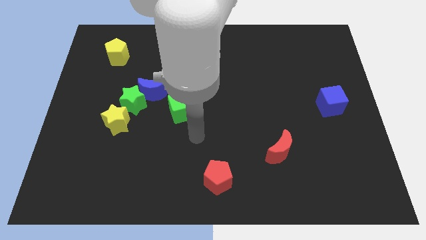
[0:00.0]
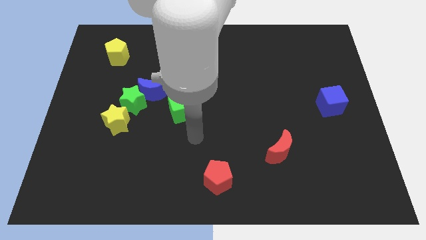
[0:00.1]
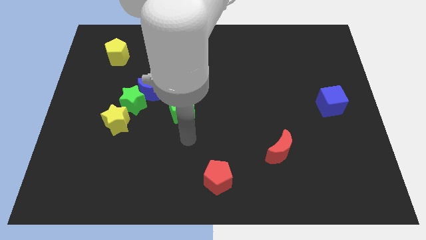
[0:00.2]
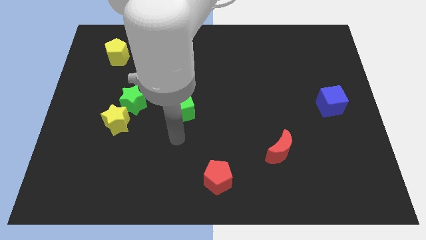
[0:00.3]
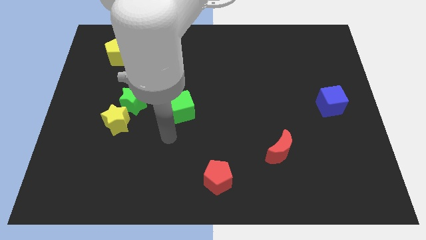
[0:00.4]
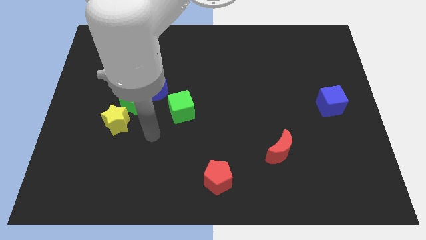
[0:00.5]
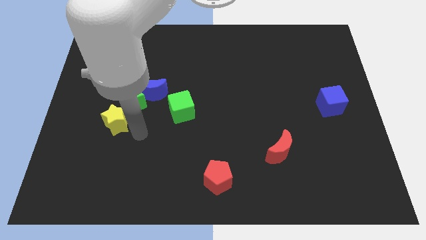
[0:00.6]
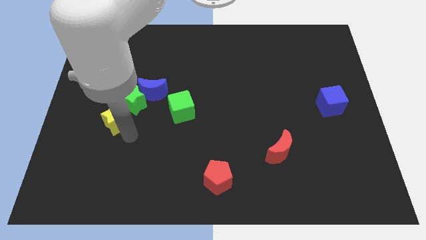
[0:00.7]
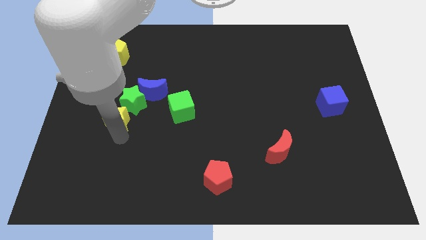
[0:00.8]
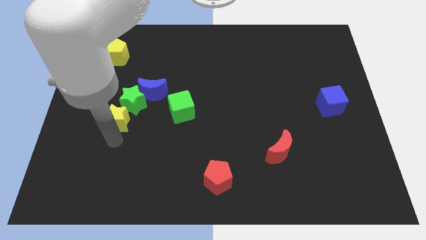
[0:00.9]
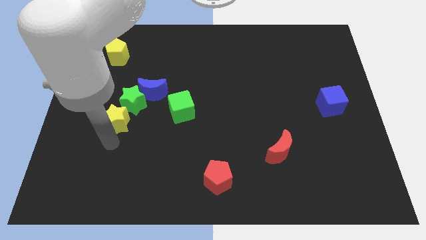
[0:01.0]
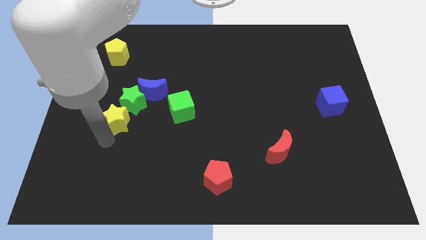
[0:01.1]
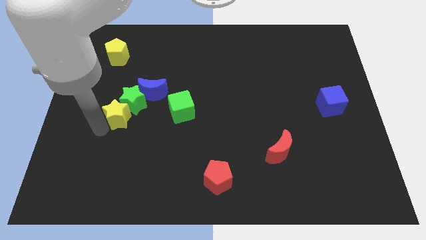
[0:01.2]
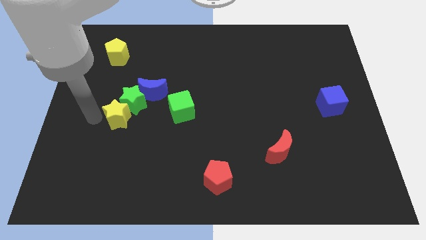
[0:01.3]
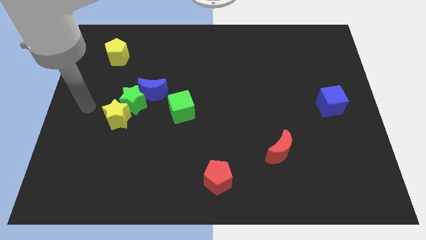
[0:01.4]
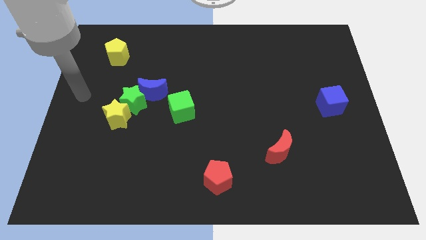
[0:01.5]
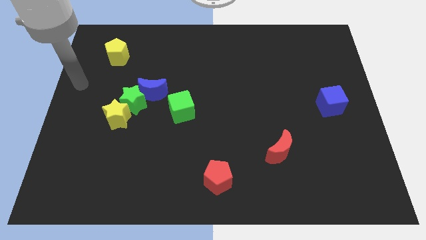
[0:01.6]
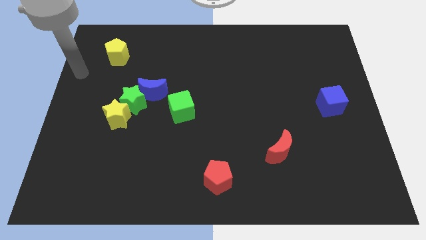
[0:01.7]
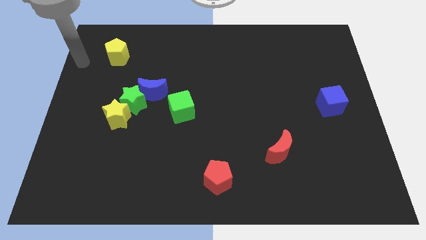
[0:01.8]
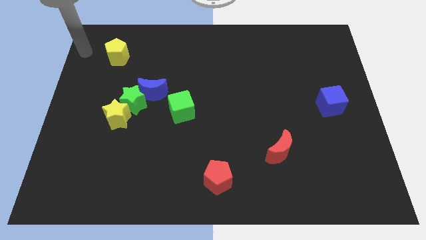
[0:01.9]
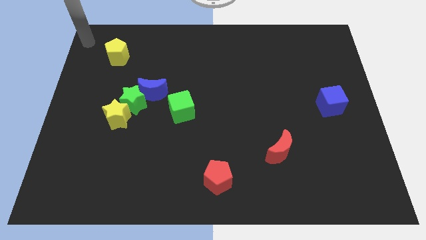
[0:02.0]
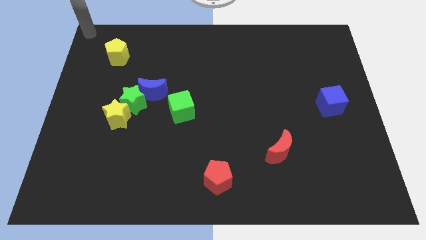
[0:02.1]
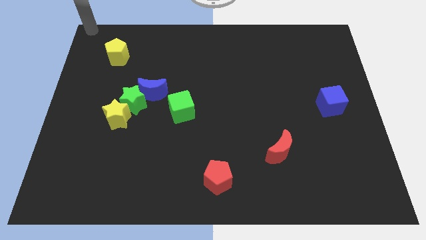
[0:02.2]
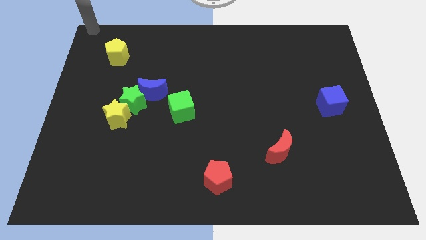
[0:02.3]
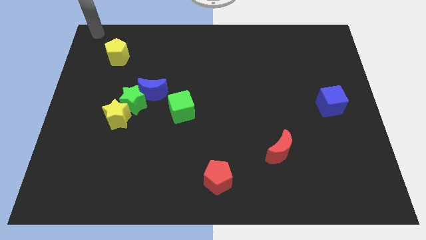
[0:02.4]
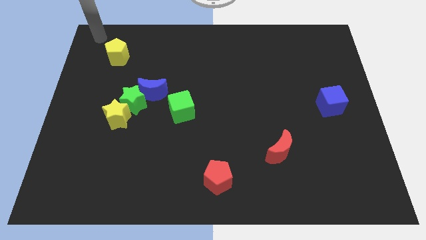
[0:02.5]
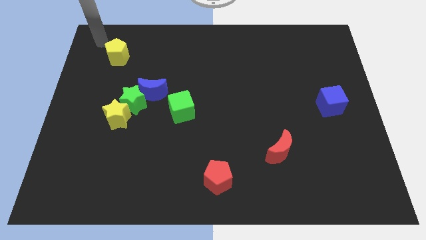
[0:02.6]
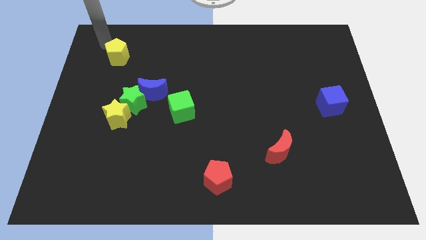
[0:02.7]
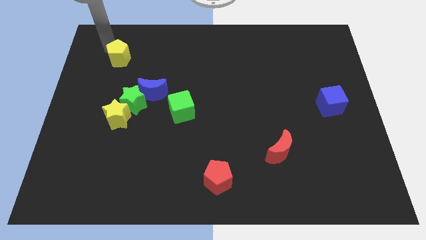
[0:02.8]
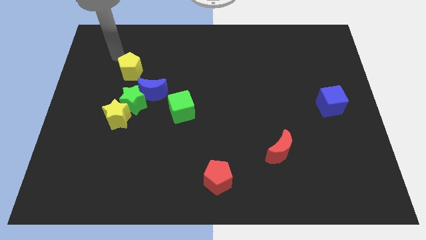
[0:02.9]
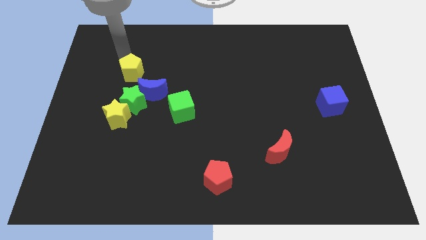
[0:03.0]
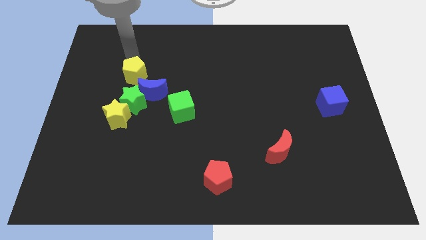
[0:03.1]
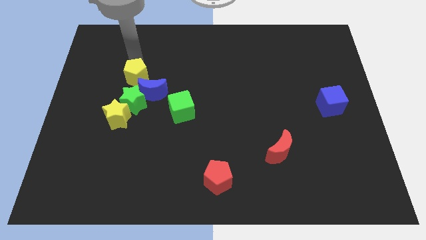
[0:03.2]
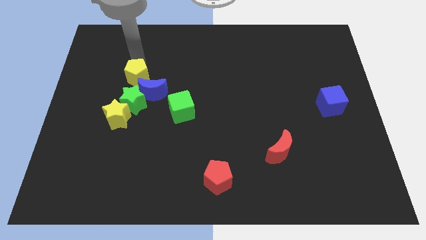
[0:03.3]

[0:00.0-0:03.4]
place the yellow pentagon at the top left of the blue moon

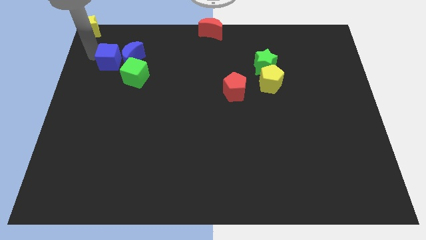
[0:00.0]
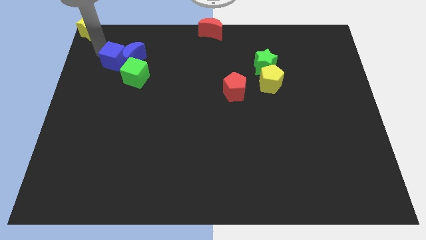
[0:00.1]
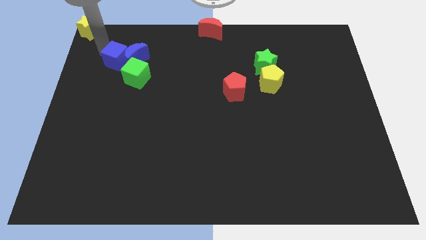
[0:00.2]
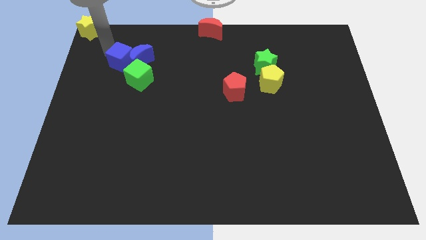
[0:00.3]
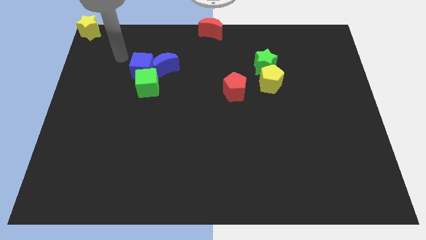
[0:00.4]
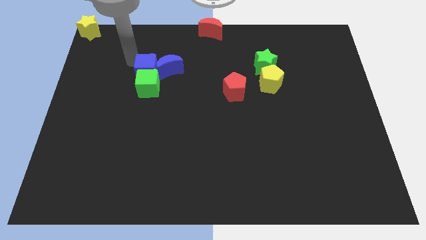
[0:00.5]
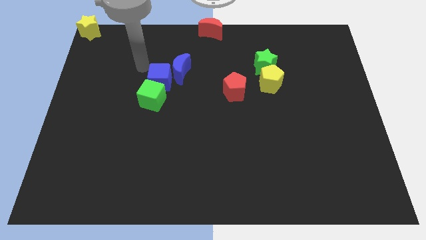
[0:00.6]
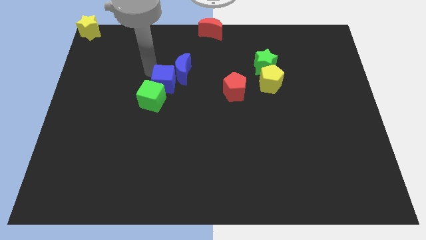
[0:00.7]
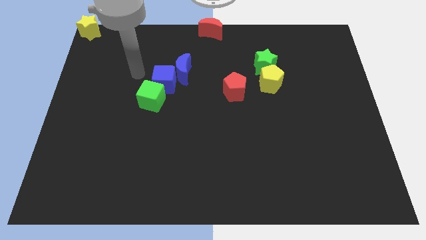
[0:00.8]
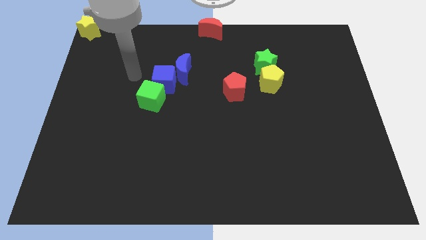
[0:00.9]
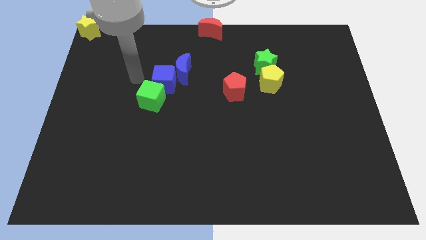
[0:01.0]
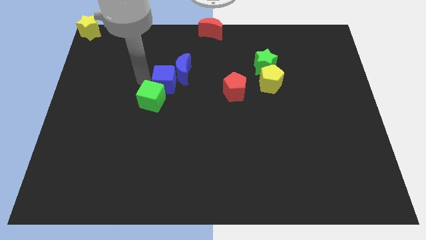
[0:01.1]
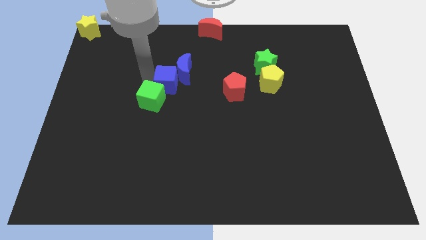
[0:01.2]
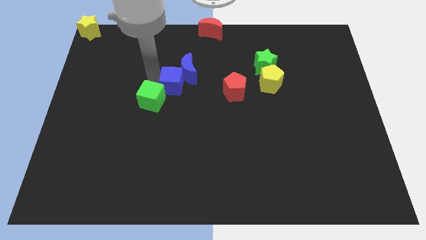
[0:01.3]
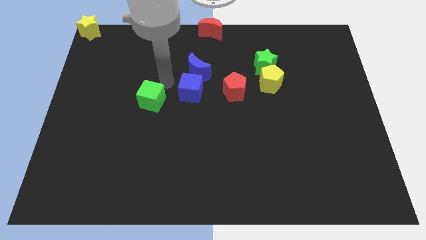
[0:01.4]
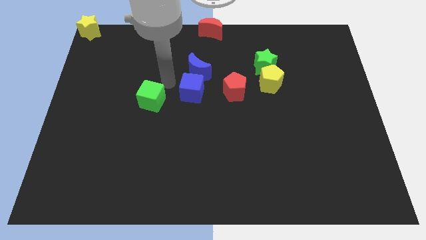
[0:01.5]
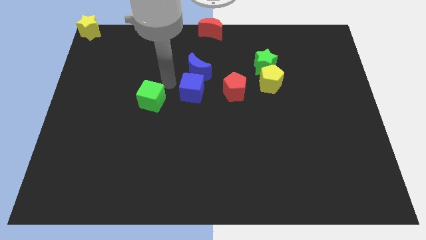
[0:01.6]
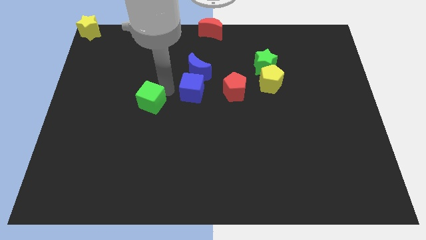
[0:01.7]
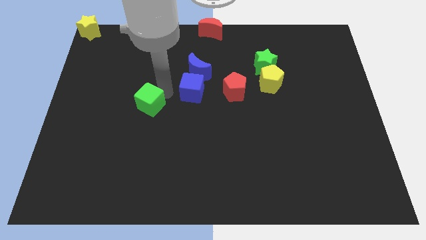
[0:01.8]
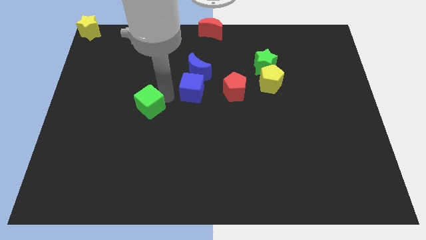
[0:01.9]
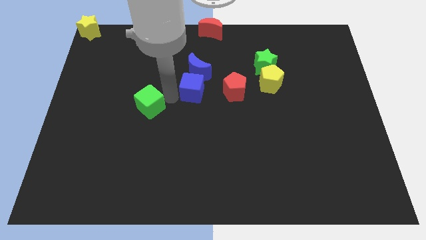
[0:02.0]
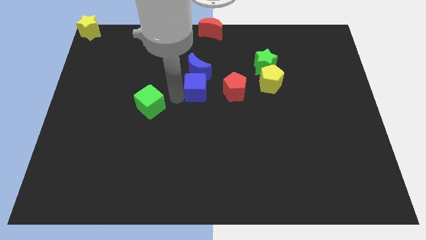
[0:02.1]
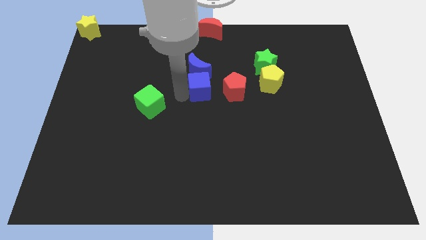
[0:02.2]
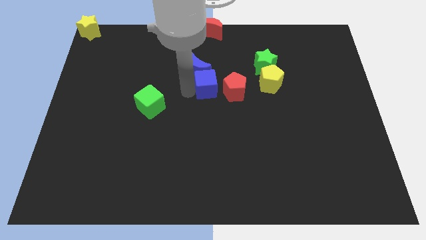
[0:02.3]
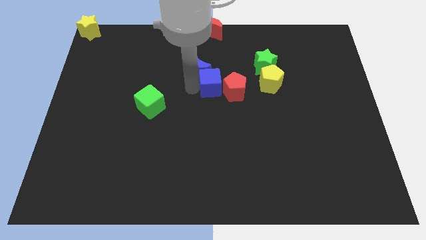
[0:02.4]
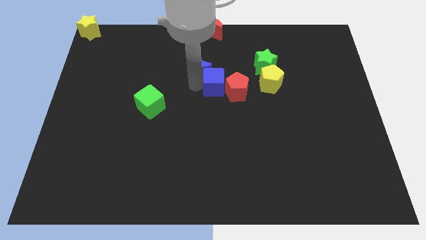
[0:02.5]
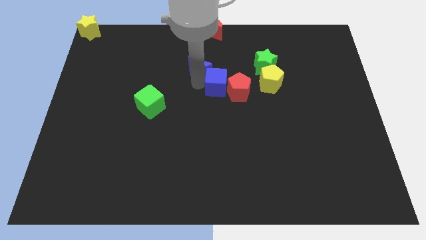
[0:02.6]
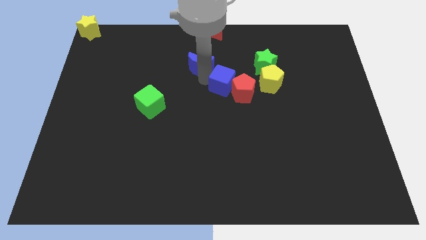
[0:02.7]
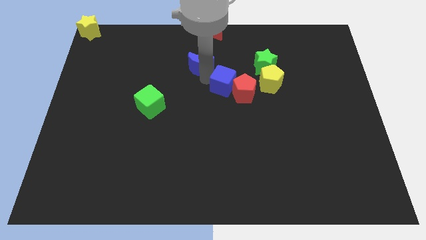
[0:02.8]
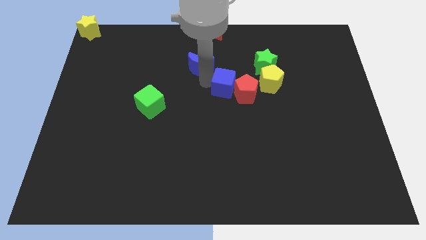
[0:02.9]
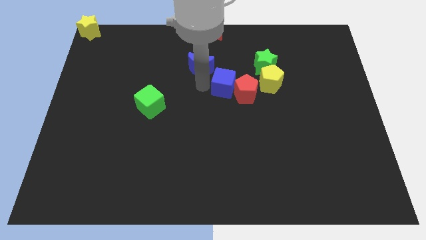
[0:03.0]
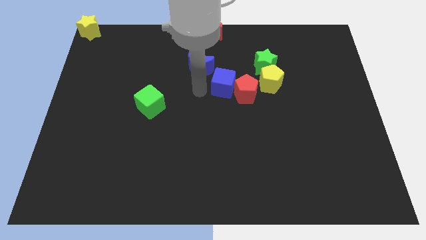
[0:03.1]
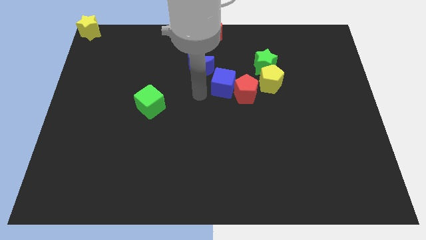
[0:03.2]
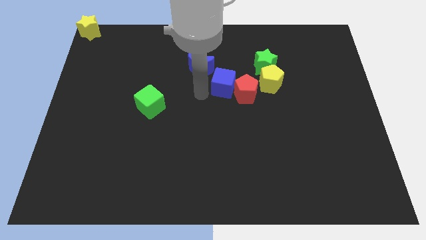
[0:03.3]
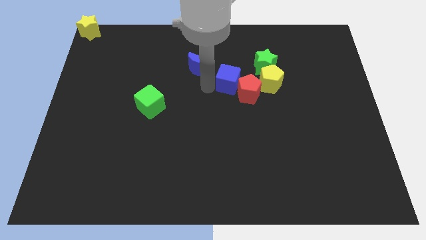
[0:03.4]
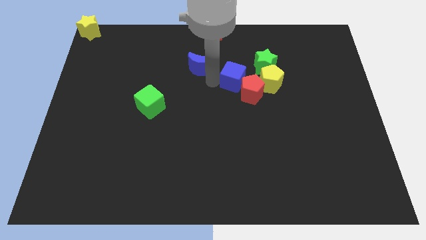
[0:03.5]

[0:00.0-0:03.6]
push the blue cube into the red pentagon

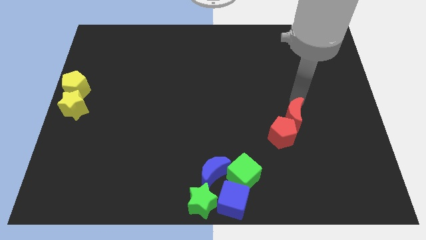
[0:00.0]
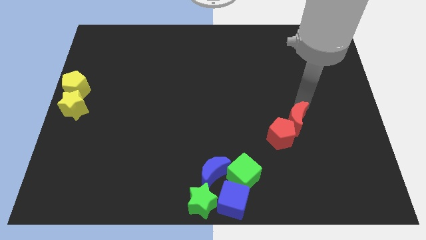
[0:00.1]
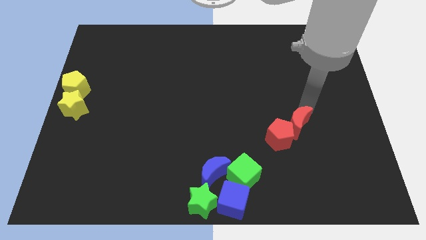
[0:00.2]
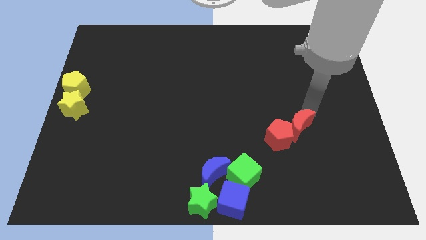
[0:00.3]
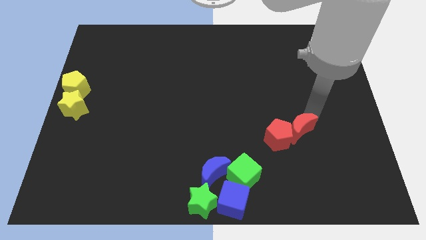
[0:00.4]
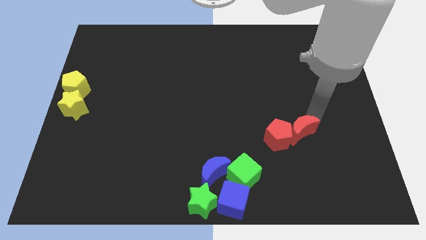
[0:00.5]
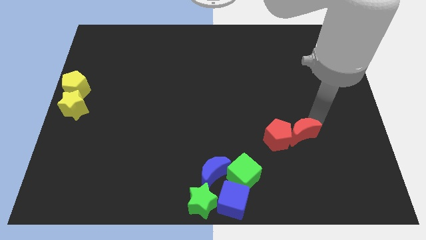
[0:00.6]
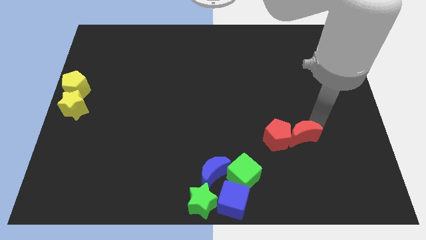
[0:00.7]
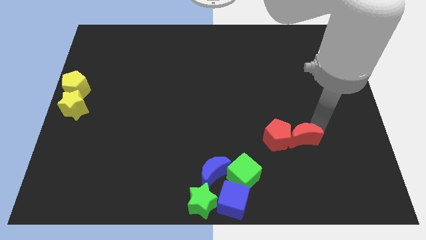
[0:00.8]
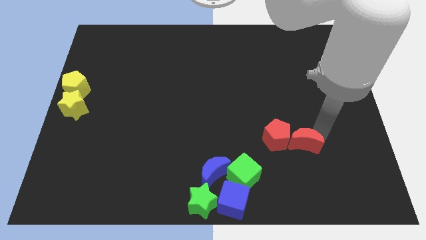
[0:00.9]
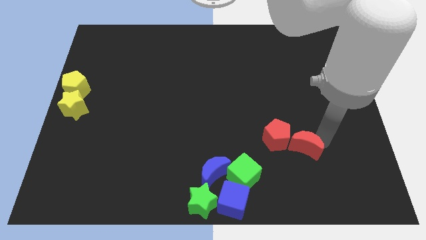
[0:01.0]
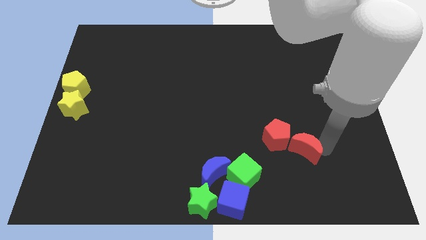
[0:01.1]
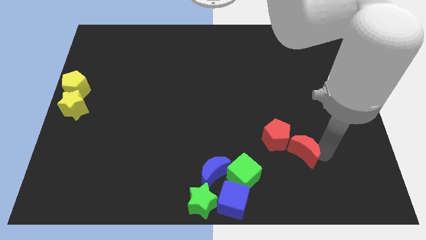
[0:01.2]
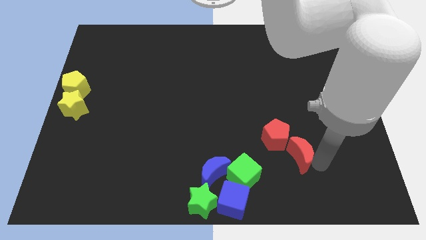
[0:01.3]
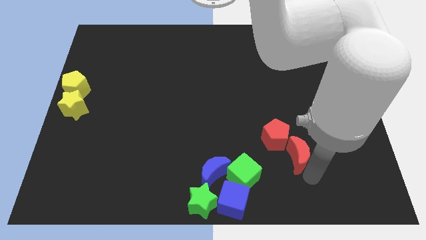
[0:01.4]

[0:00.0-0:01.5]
slide the red moon to the bottom right side of the red pentagon

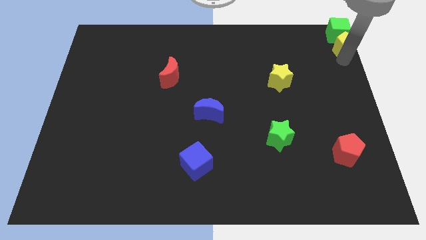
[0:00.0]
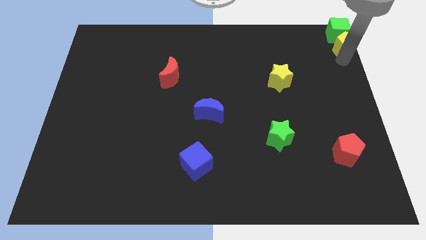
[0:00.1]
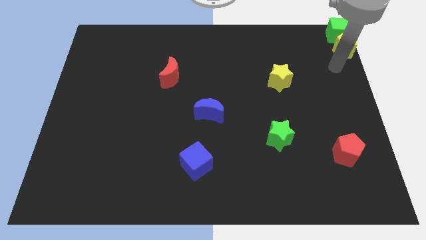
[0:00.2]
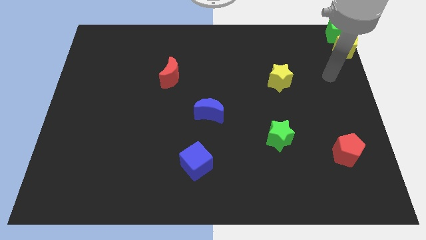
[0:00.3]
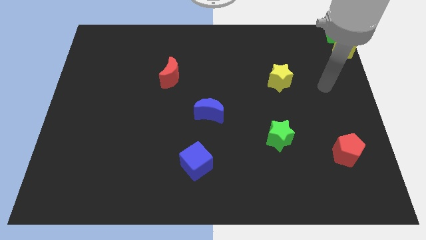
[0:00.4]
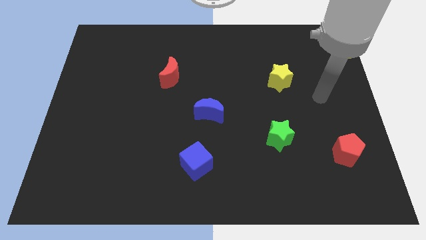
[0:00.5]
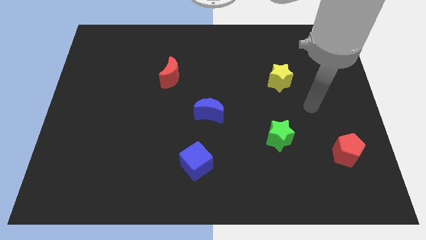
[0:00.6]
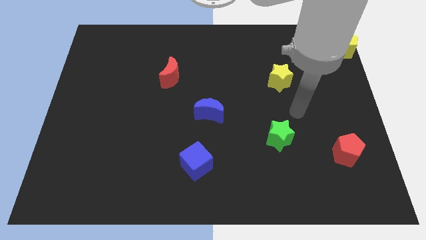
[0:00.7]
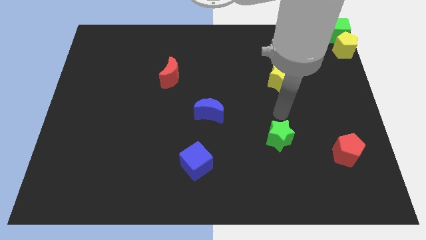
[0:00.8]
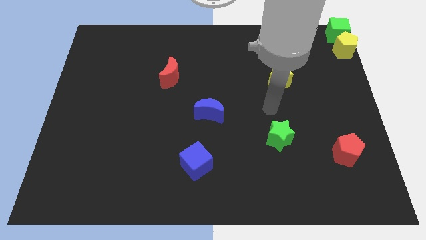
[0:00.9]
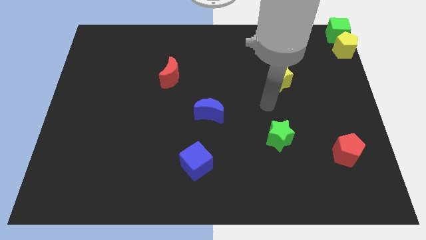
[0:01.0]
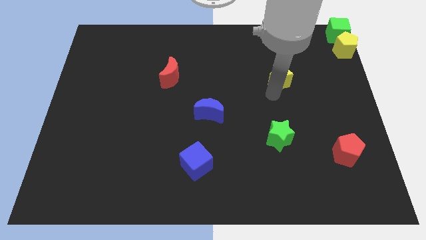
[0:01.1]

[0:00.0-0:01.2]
move your arm away from the yellow pentagon
